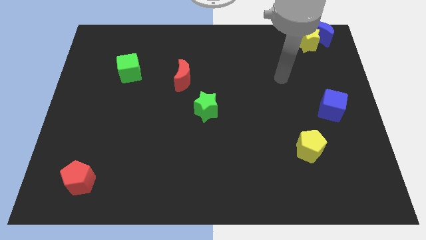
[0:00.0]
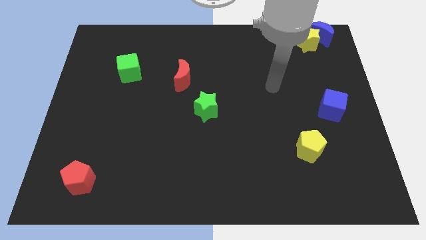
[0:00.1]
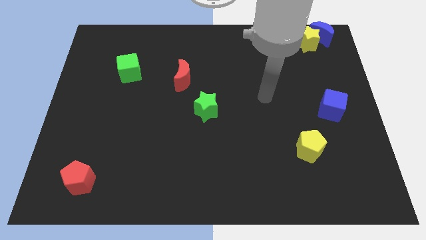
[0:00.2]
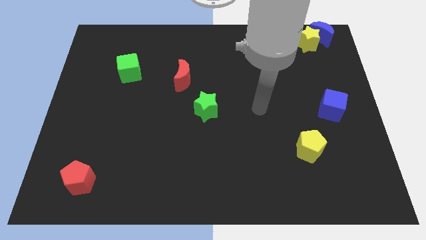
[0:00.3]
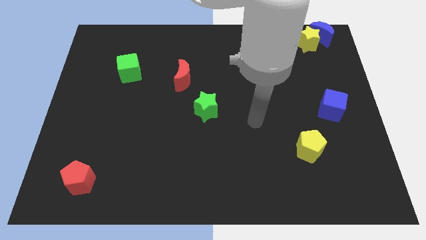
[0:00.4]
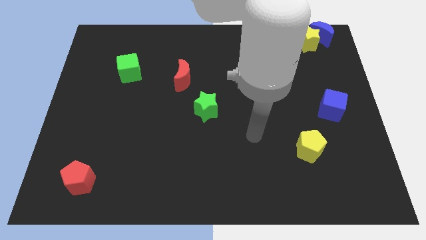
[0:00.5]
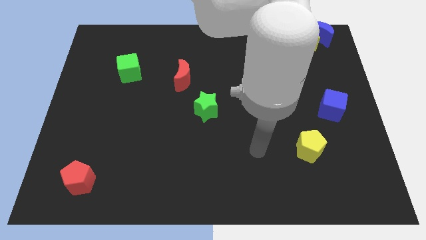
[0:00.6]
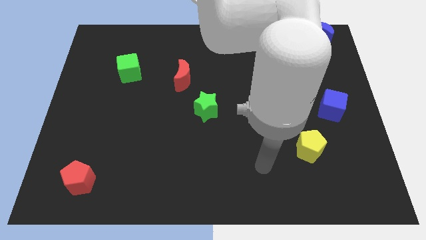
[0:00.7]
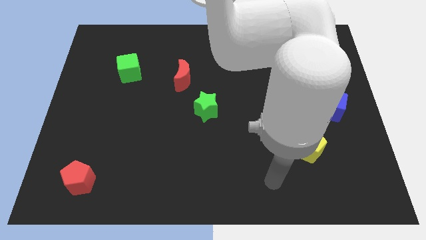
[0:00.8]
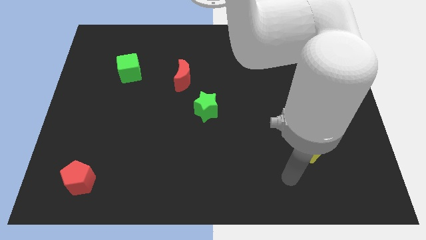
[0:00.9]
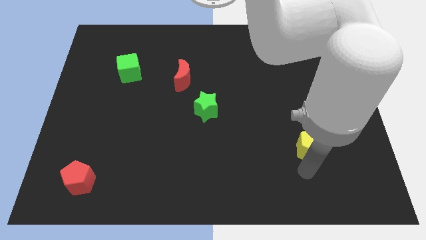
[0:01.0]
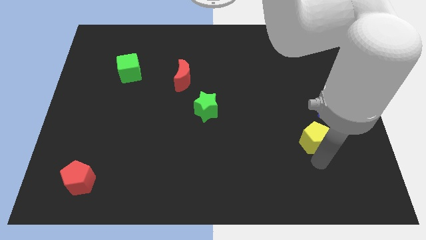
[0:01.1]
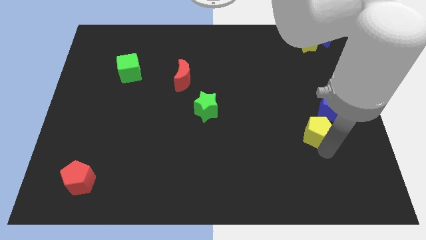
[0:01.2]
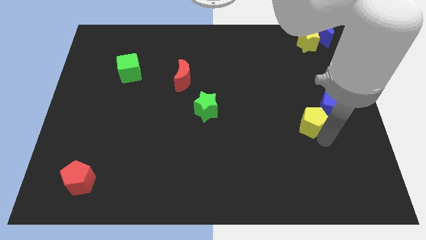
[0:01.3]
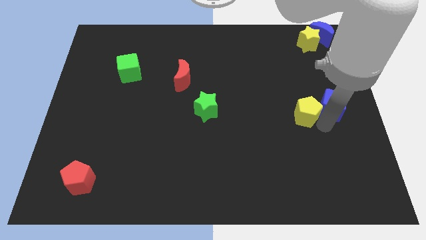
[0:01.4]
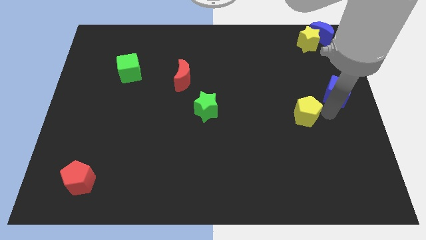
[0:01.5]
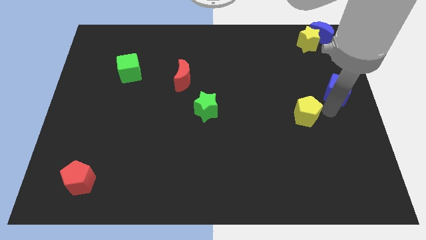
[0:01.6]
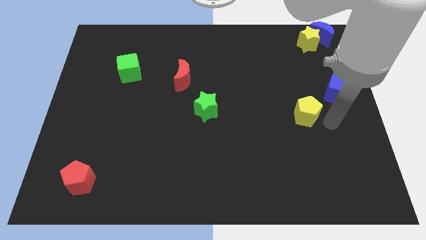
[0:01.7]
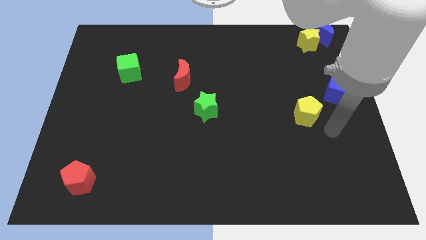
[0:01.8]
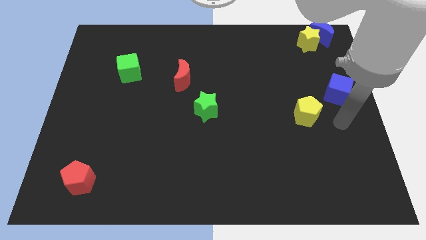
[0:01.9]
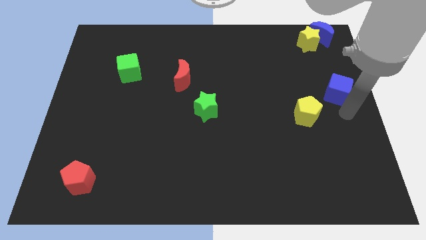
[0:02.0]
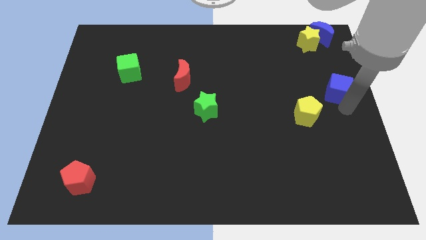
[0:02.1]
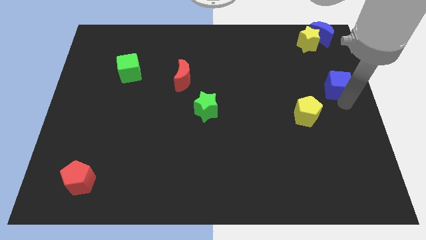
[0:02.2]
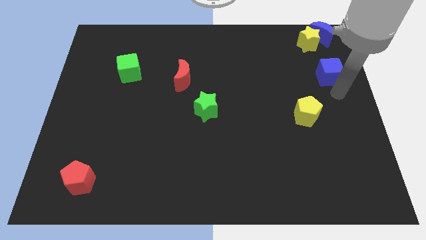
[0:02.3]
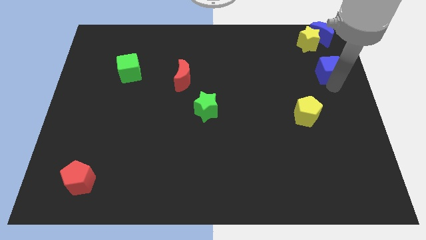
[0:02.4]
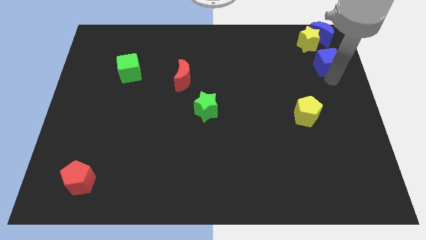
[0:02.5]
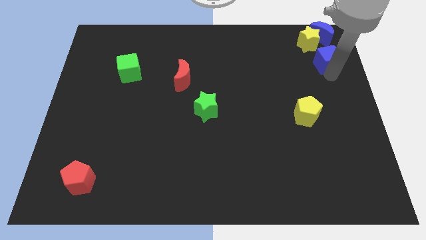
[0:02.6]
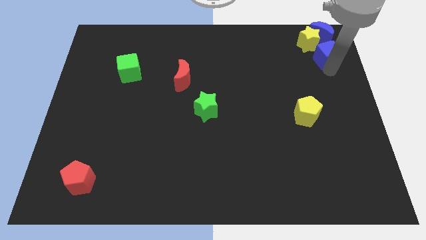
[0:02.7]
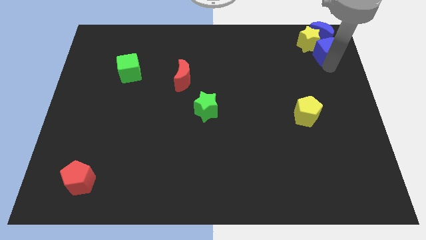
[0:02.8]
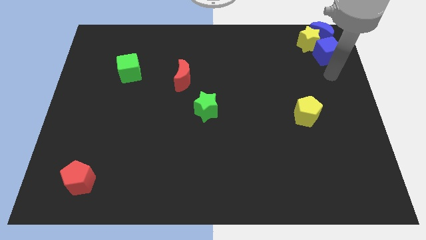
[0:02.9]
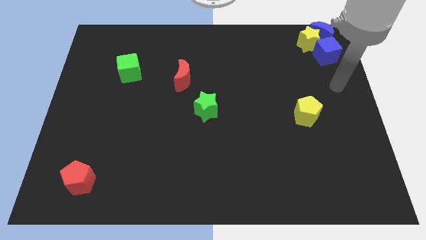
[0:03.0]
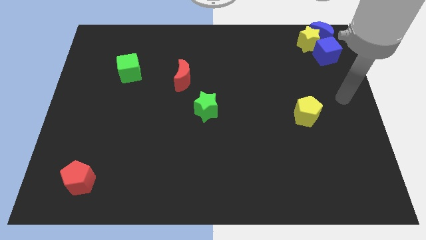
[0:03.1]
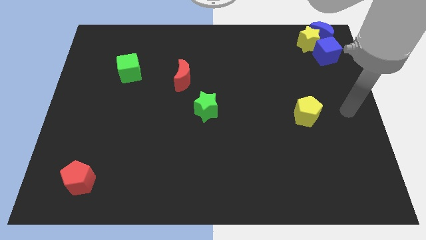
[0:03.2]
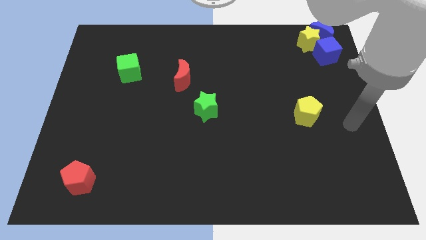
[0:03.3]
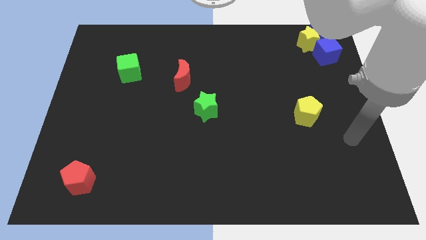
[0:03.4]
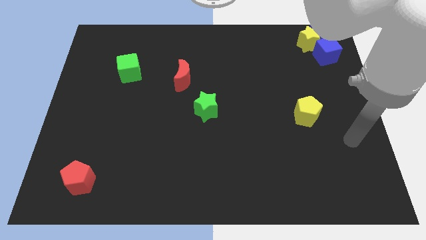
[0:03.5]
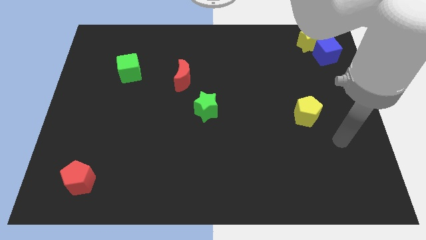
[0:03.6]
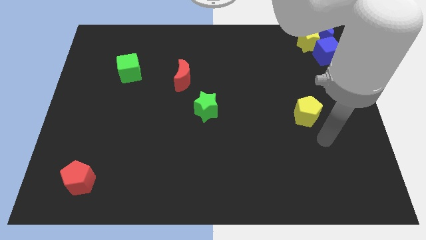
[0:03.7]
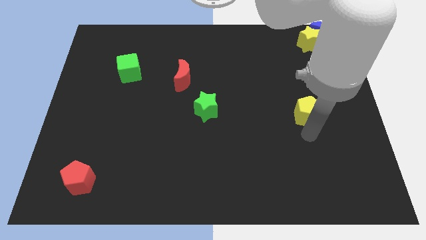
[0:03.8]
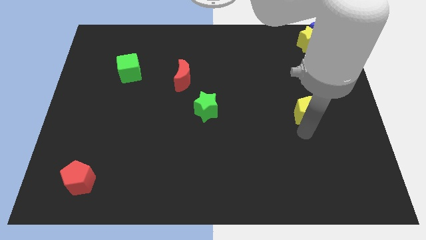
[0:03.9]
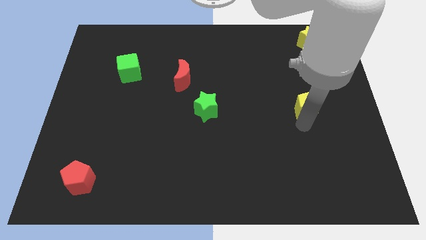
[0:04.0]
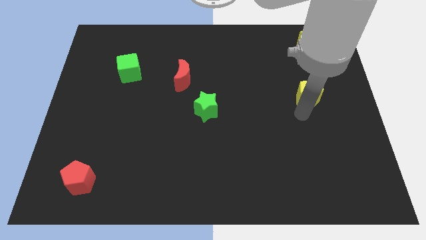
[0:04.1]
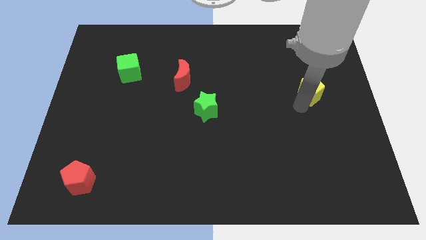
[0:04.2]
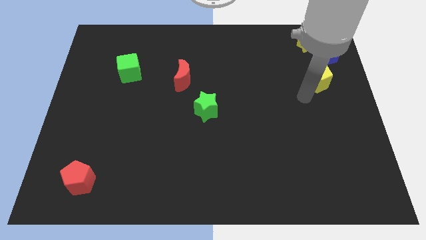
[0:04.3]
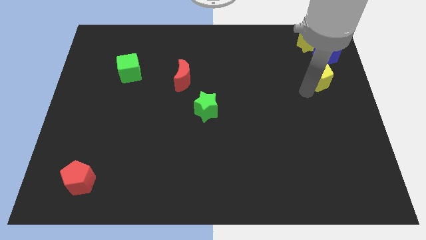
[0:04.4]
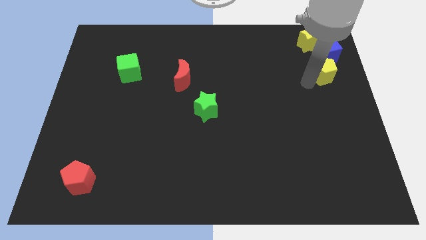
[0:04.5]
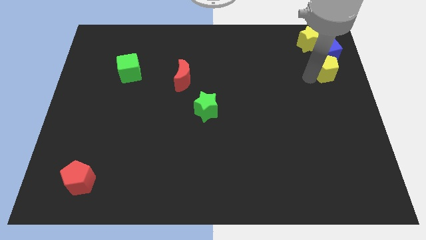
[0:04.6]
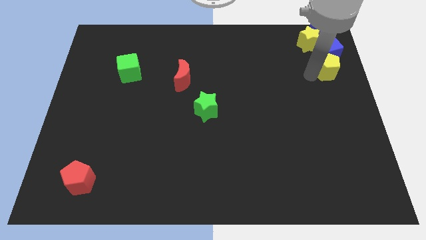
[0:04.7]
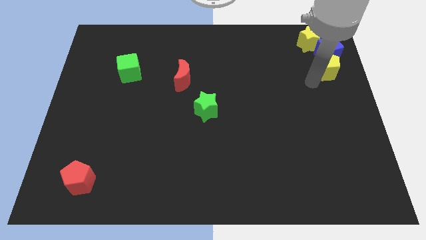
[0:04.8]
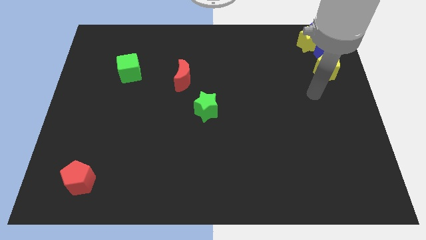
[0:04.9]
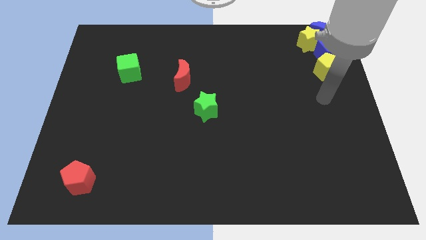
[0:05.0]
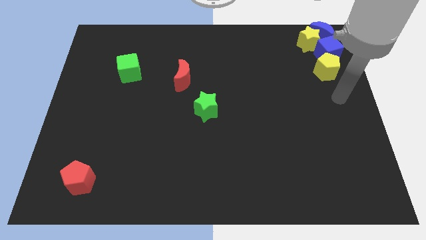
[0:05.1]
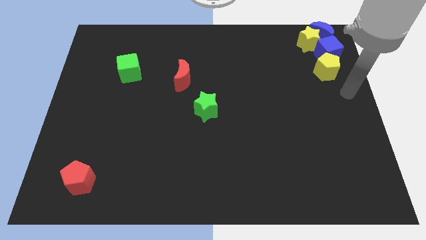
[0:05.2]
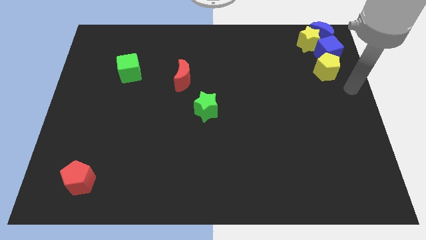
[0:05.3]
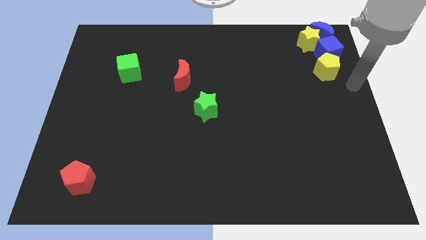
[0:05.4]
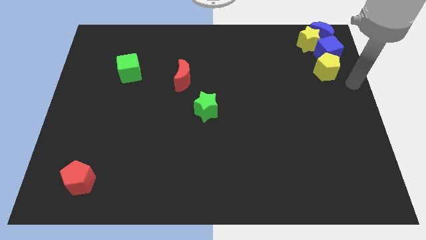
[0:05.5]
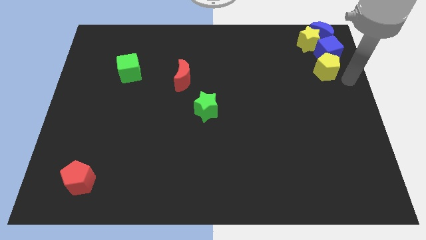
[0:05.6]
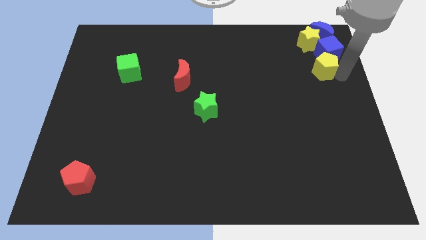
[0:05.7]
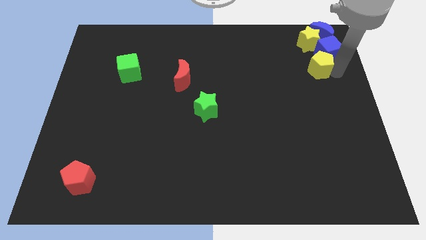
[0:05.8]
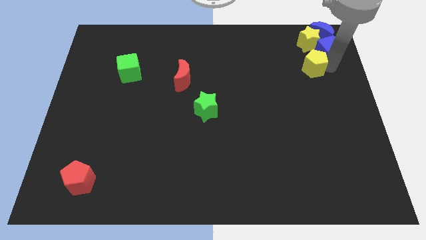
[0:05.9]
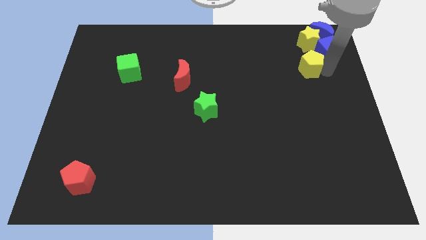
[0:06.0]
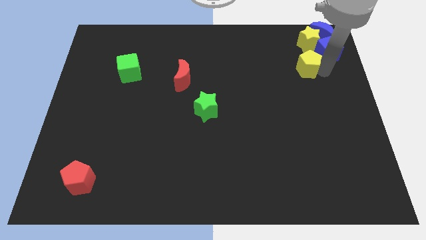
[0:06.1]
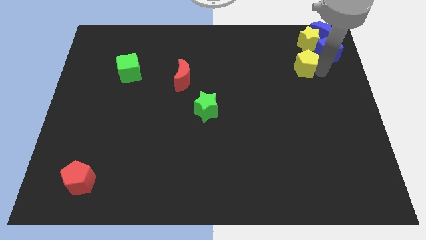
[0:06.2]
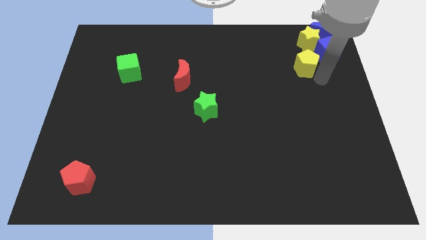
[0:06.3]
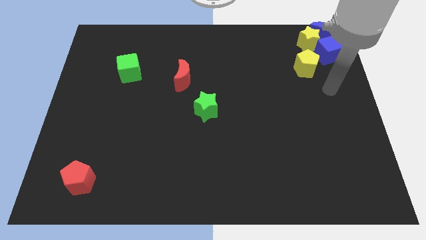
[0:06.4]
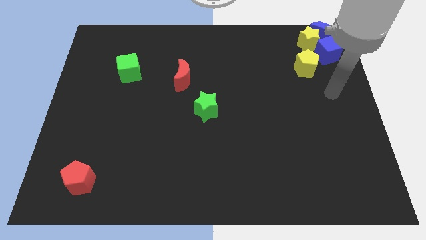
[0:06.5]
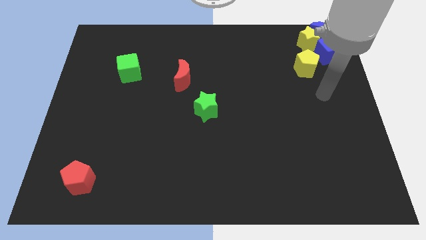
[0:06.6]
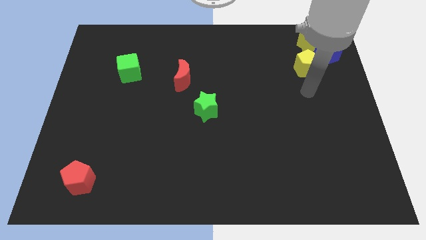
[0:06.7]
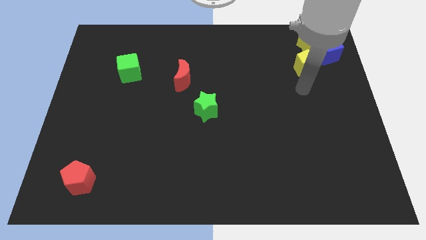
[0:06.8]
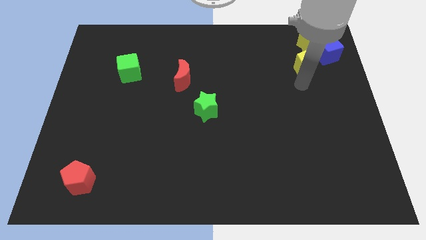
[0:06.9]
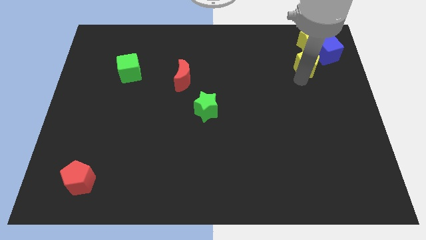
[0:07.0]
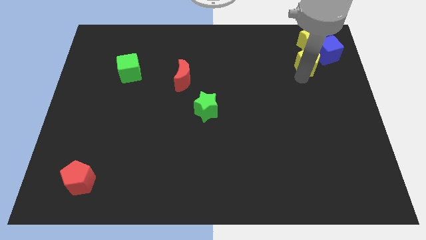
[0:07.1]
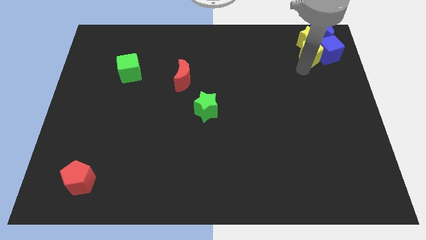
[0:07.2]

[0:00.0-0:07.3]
group up the blue things with the yelloe blocks at the top right side of the board

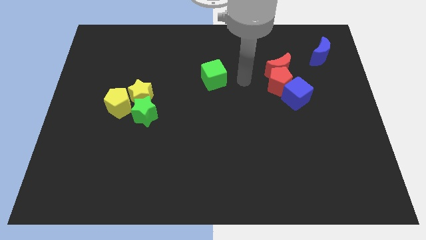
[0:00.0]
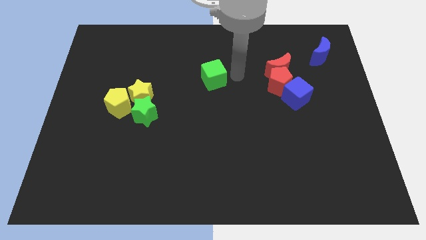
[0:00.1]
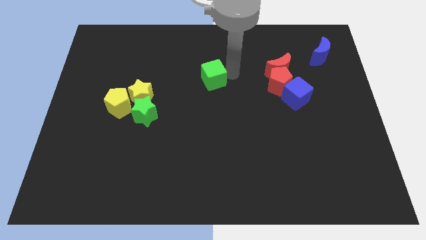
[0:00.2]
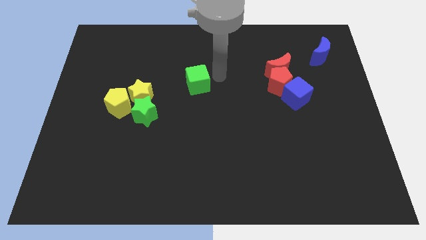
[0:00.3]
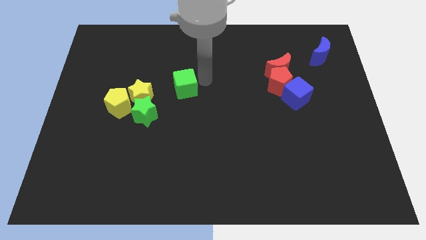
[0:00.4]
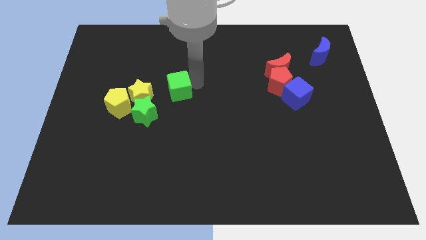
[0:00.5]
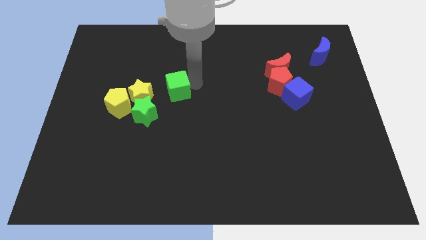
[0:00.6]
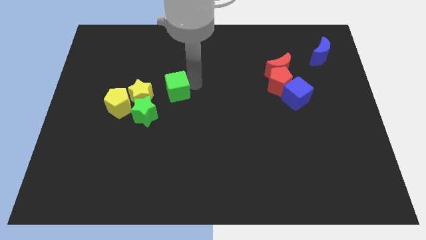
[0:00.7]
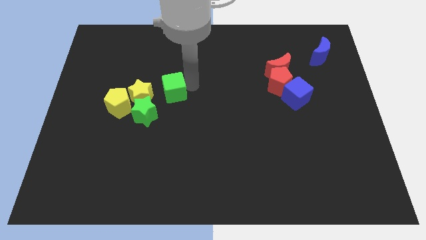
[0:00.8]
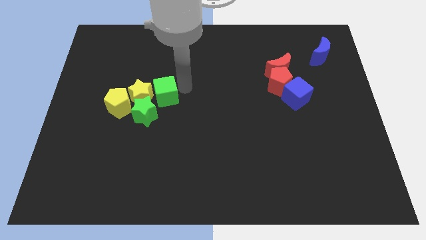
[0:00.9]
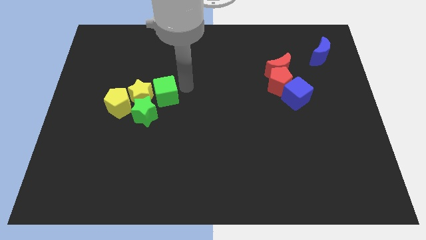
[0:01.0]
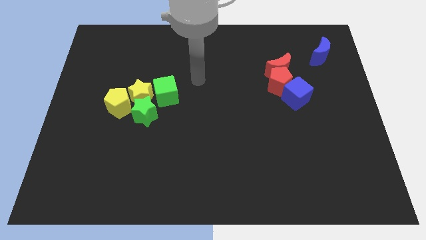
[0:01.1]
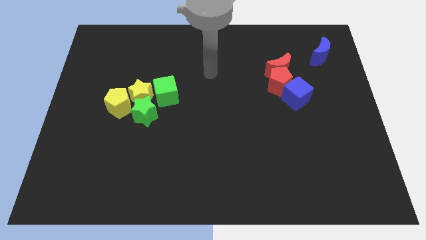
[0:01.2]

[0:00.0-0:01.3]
push the green cube to the right side of yellow star

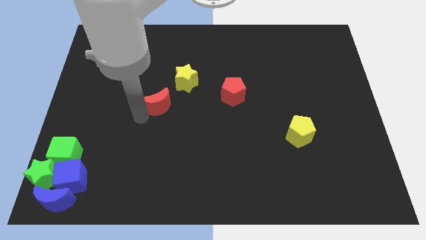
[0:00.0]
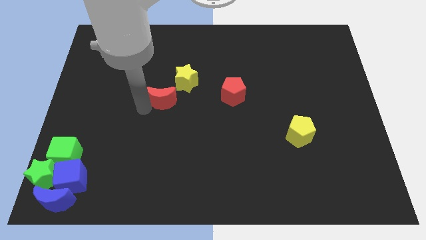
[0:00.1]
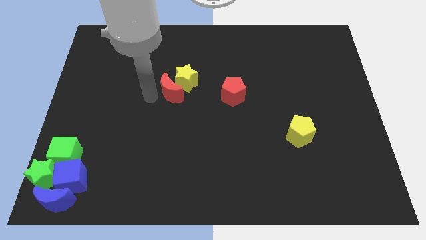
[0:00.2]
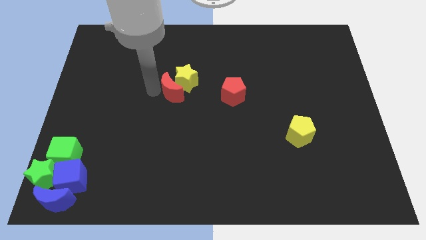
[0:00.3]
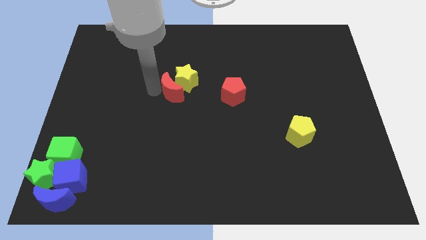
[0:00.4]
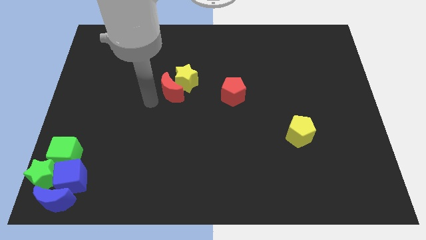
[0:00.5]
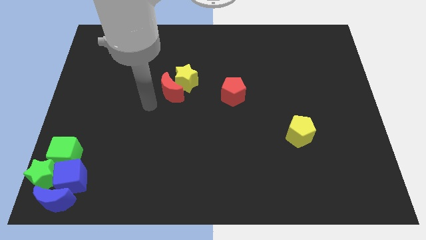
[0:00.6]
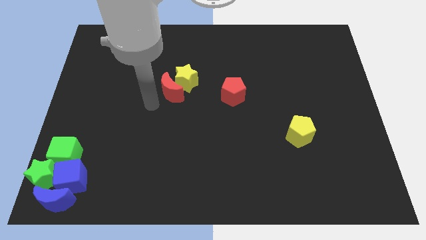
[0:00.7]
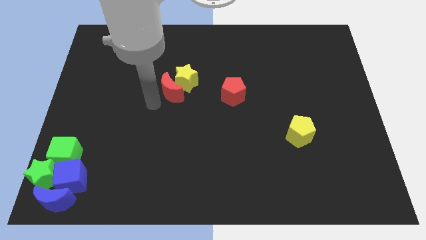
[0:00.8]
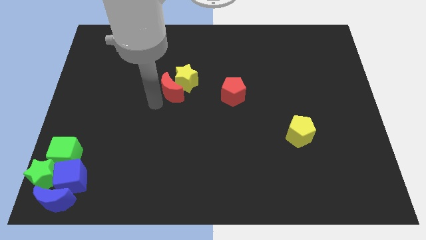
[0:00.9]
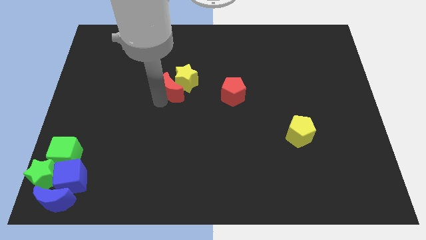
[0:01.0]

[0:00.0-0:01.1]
move red moon into yellow star
